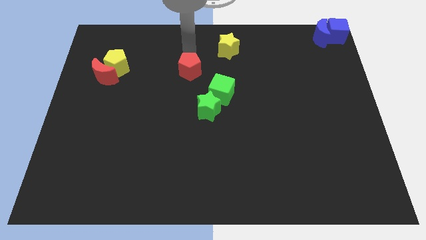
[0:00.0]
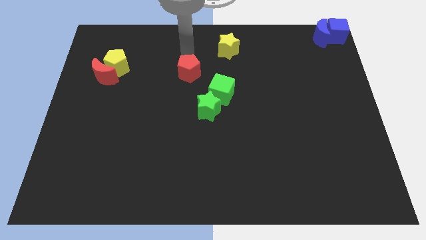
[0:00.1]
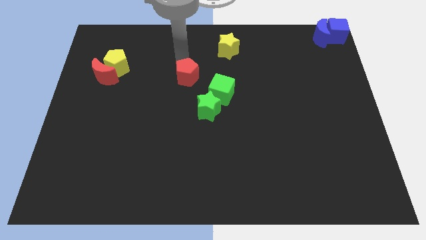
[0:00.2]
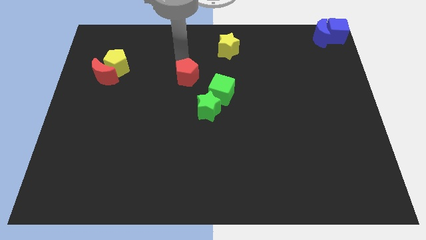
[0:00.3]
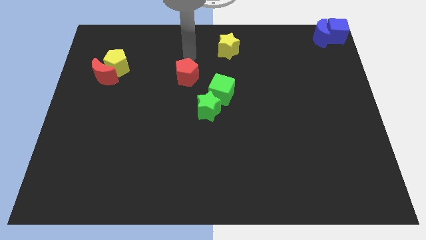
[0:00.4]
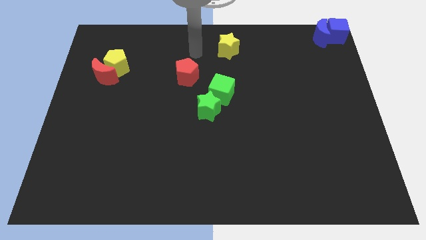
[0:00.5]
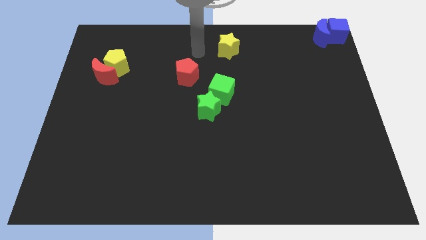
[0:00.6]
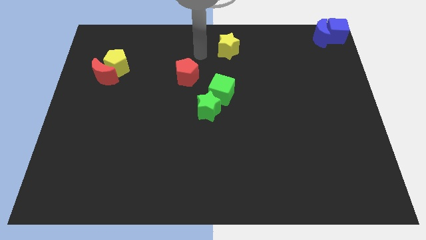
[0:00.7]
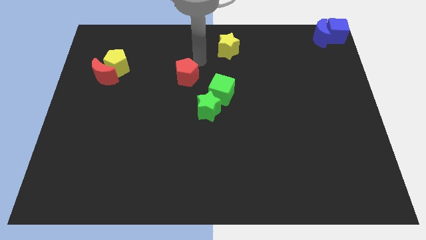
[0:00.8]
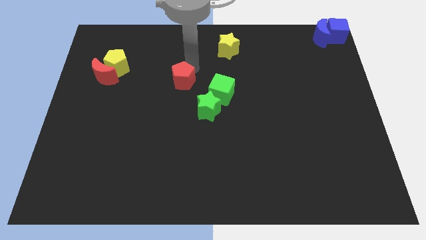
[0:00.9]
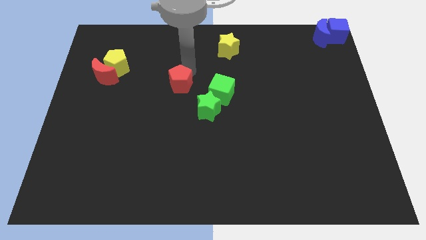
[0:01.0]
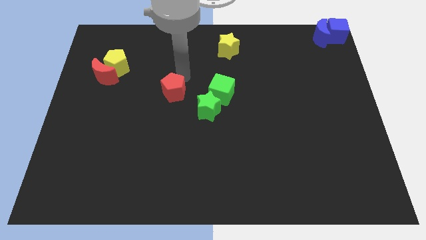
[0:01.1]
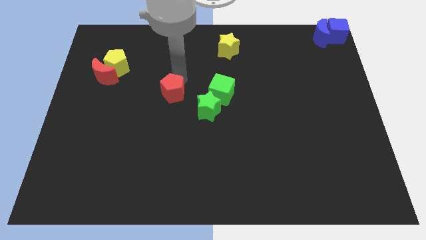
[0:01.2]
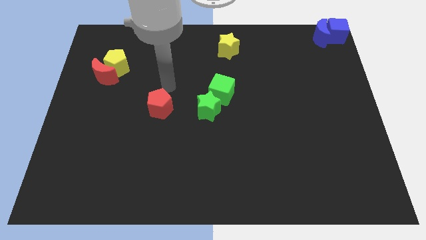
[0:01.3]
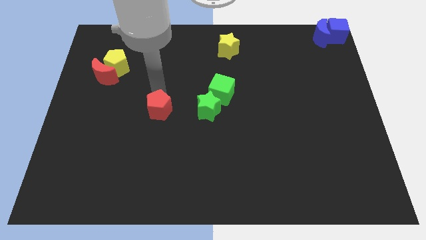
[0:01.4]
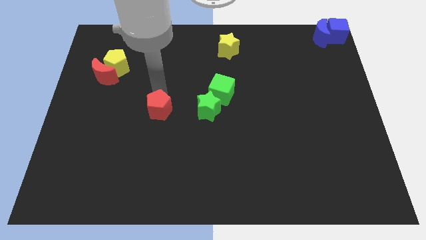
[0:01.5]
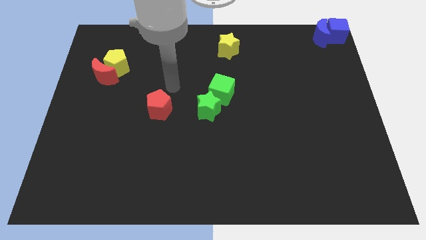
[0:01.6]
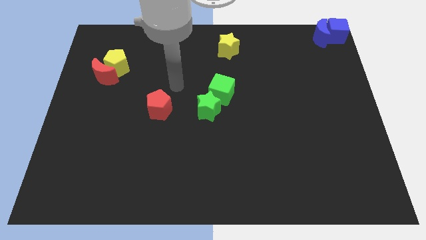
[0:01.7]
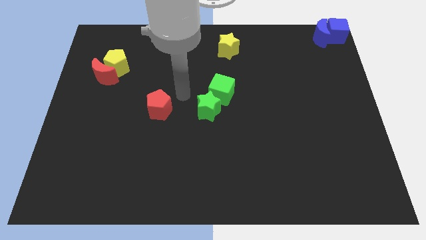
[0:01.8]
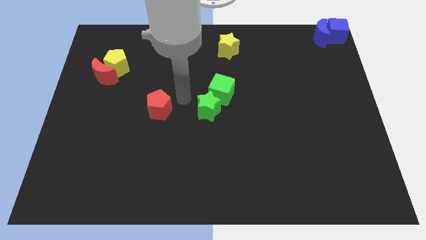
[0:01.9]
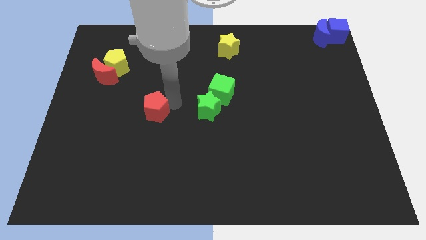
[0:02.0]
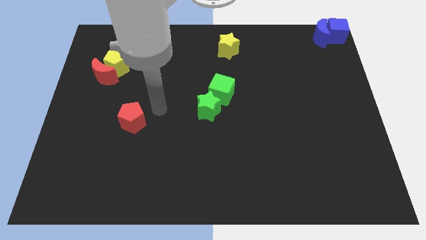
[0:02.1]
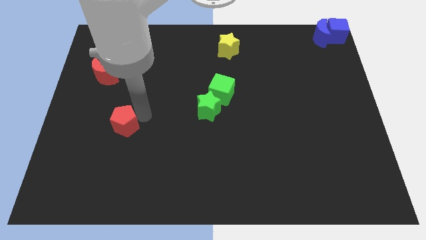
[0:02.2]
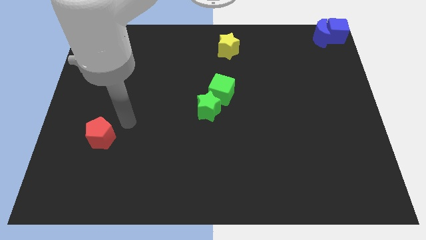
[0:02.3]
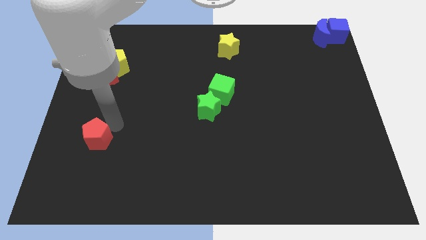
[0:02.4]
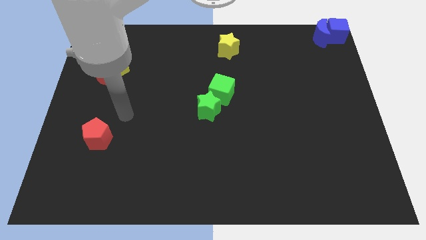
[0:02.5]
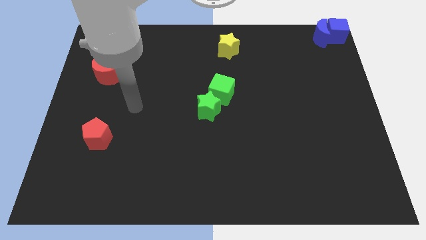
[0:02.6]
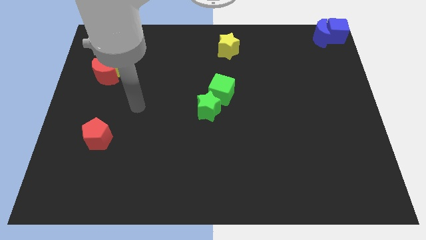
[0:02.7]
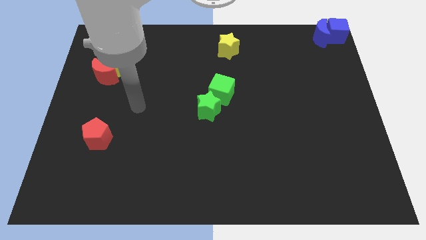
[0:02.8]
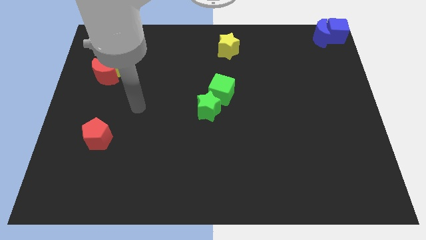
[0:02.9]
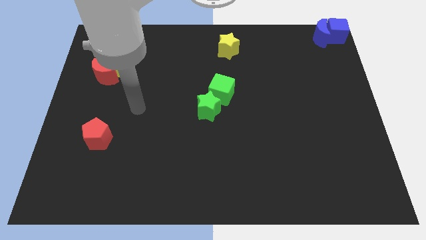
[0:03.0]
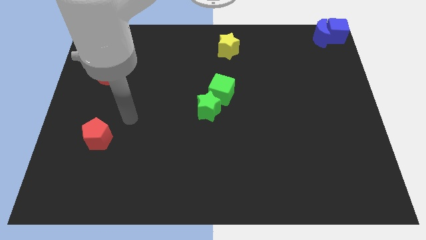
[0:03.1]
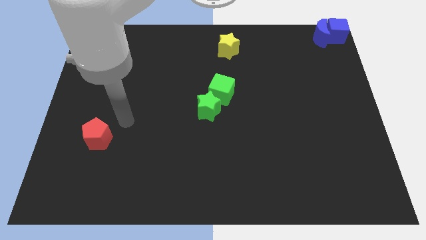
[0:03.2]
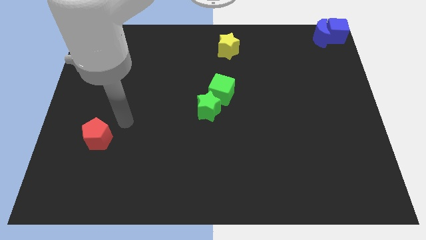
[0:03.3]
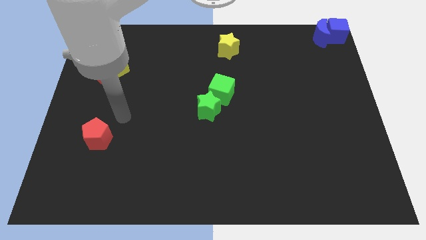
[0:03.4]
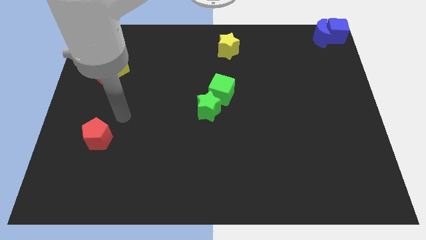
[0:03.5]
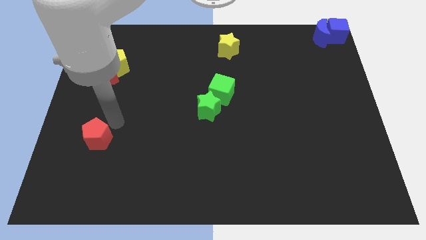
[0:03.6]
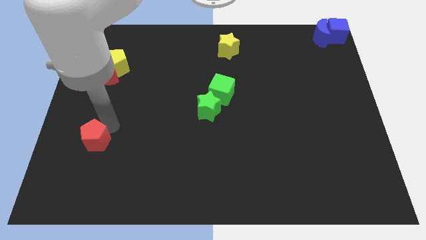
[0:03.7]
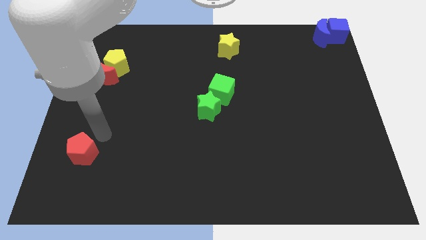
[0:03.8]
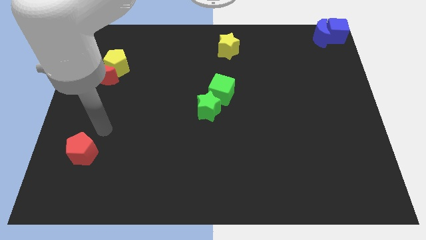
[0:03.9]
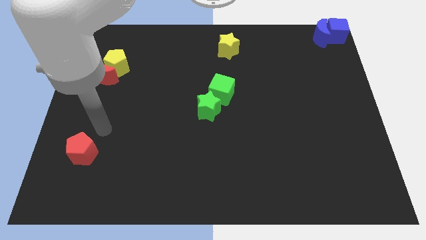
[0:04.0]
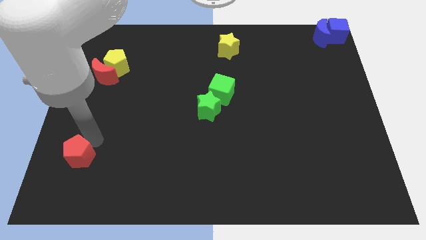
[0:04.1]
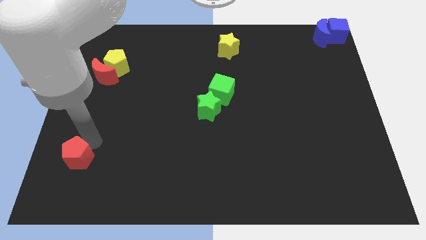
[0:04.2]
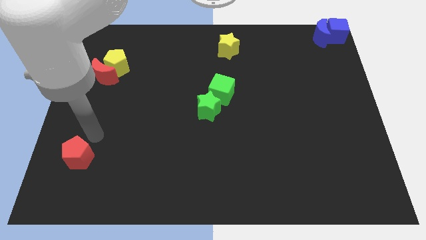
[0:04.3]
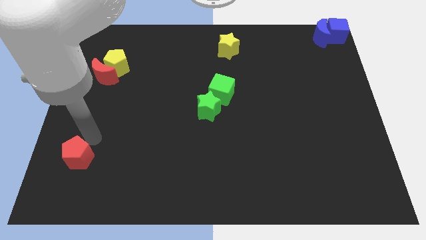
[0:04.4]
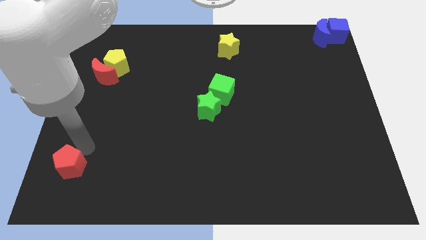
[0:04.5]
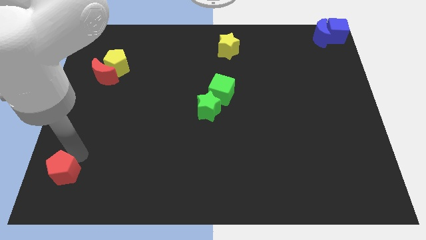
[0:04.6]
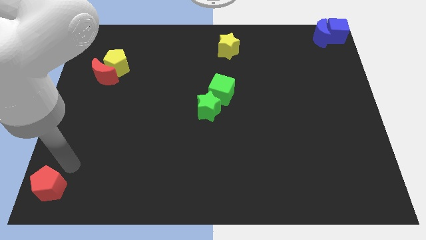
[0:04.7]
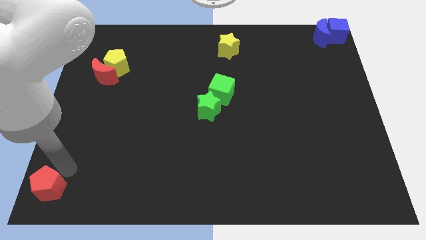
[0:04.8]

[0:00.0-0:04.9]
push red pentagon downwards

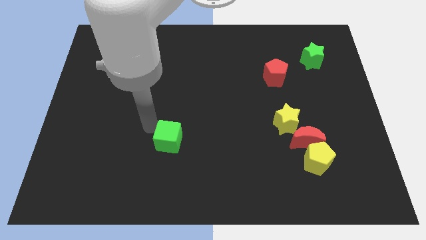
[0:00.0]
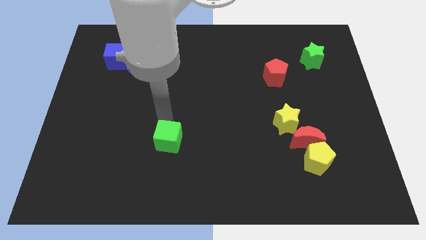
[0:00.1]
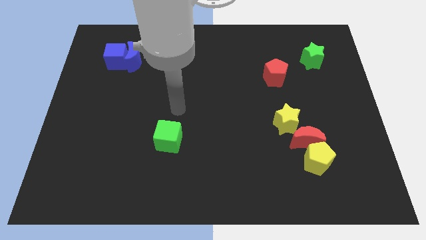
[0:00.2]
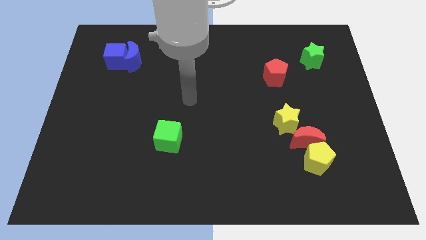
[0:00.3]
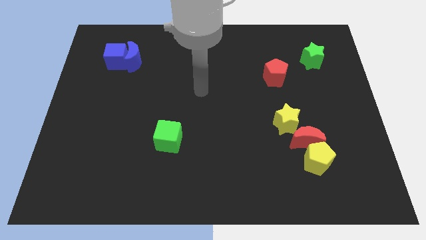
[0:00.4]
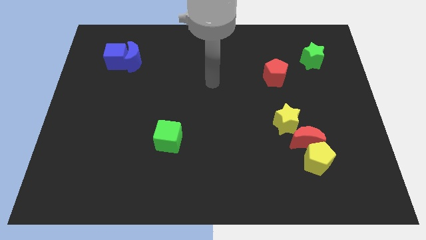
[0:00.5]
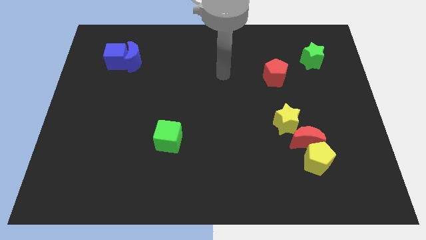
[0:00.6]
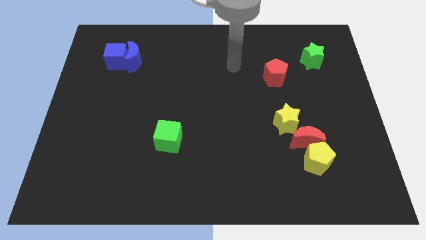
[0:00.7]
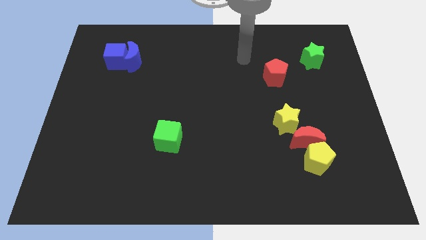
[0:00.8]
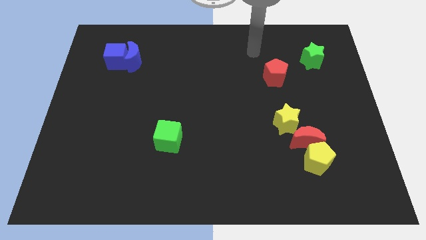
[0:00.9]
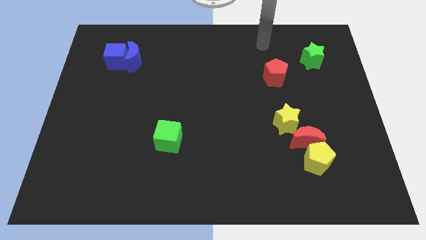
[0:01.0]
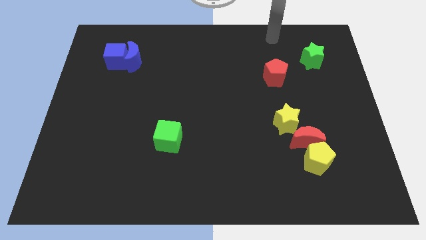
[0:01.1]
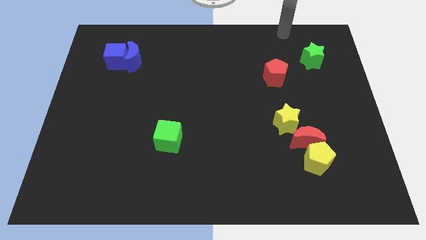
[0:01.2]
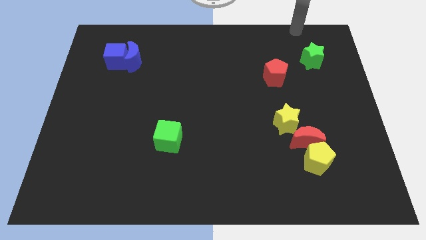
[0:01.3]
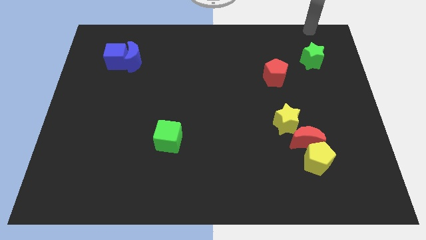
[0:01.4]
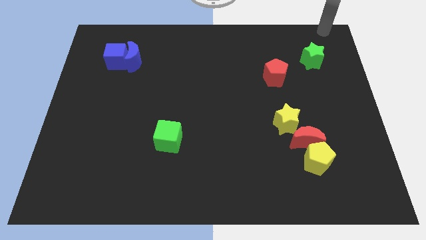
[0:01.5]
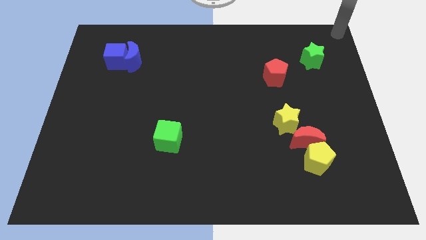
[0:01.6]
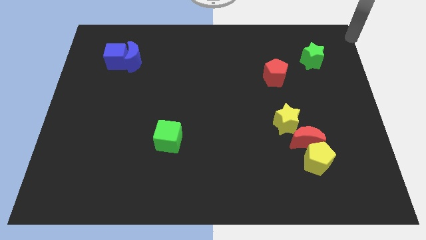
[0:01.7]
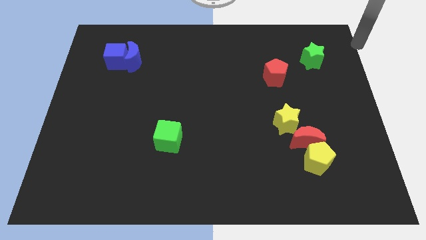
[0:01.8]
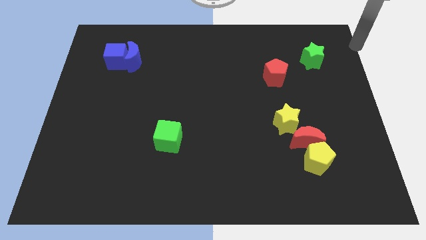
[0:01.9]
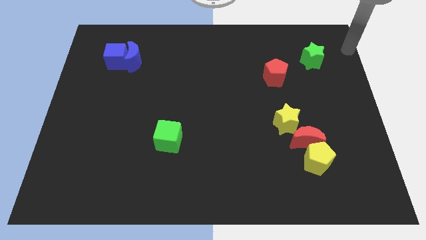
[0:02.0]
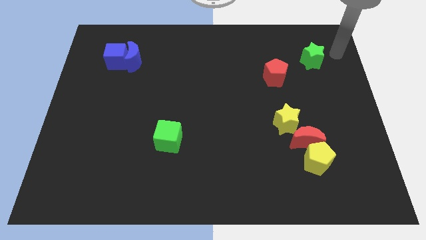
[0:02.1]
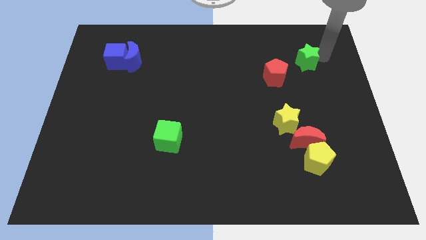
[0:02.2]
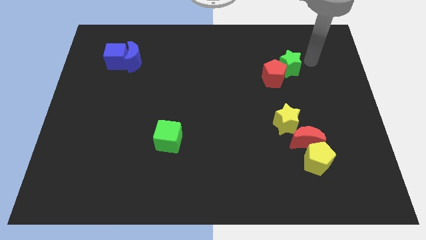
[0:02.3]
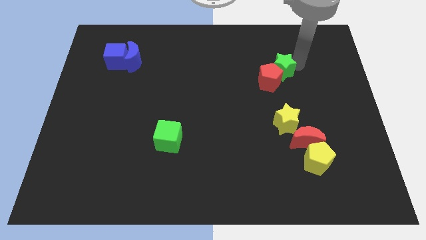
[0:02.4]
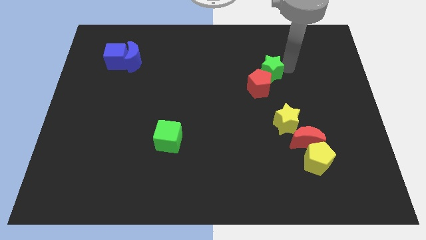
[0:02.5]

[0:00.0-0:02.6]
push green star and red pentagon towards the center of the board

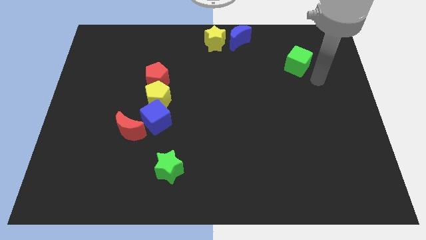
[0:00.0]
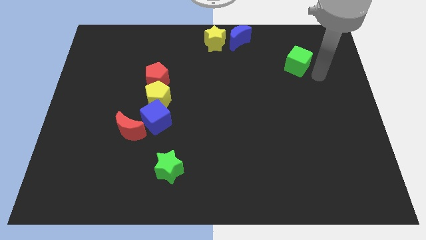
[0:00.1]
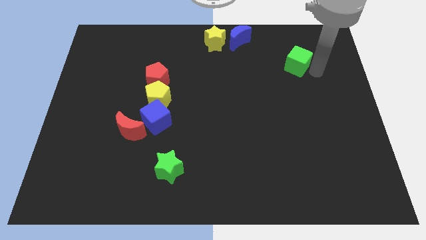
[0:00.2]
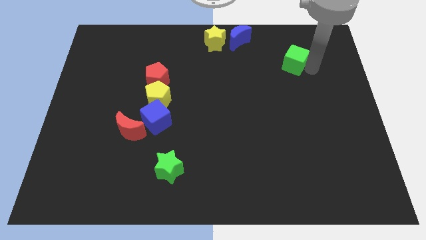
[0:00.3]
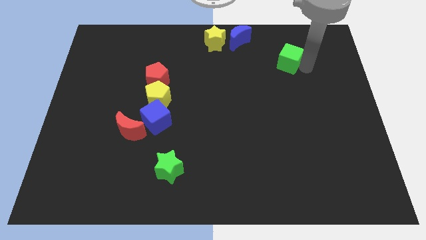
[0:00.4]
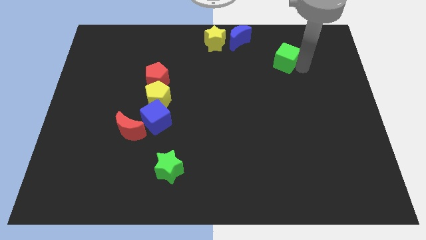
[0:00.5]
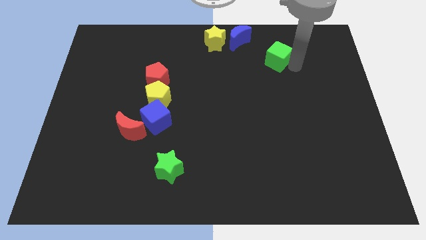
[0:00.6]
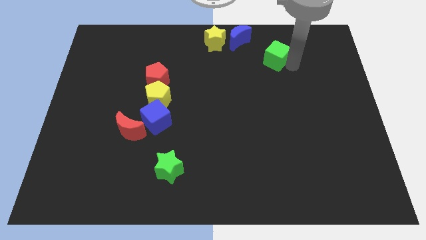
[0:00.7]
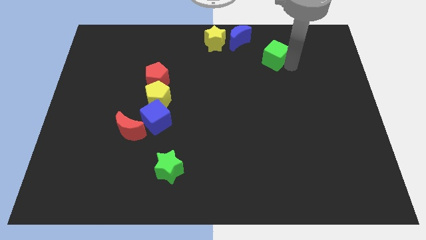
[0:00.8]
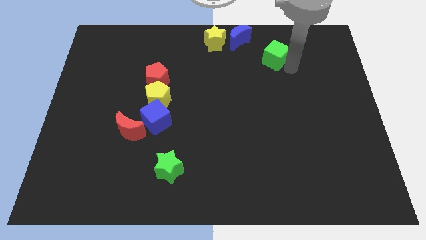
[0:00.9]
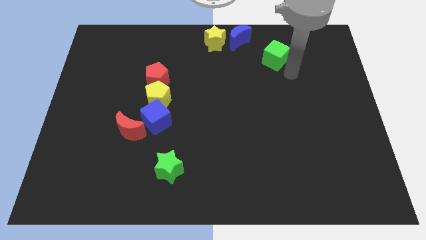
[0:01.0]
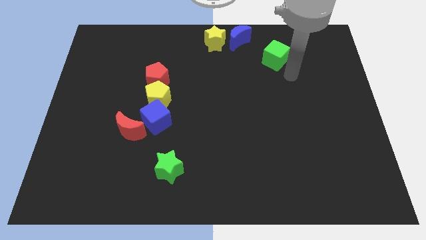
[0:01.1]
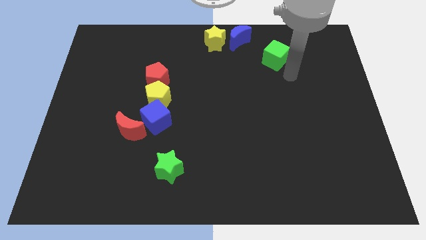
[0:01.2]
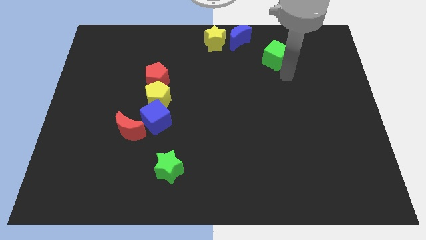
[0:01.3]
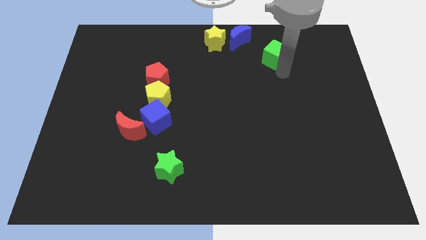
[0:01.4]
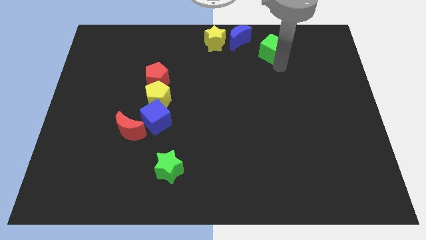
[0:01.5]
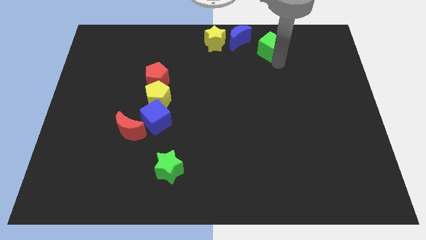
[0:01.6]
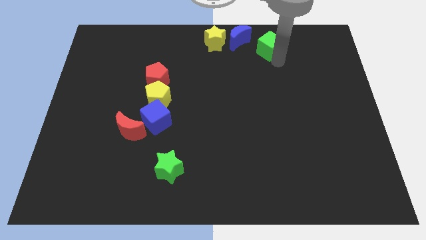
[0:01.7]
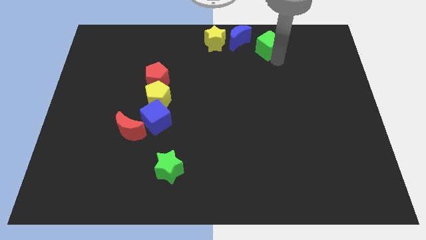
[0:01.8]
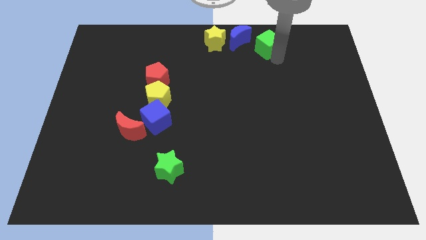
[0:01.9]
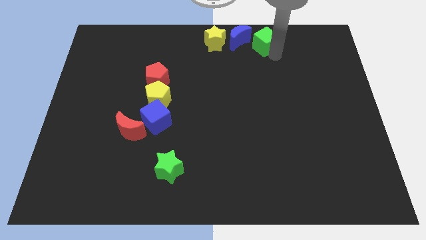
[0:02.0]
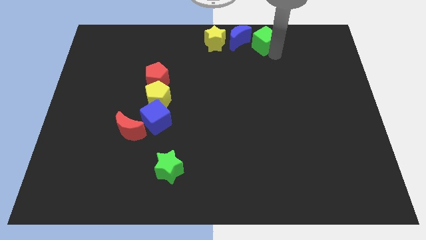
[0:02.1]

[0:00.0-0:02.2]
push the green cube towards the blue moon
